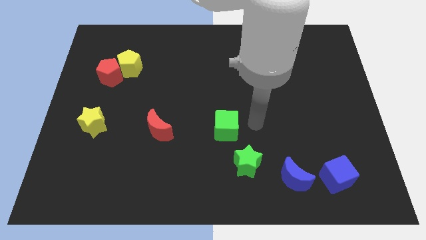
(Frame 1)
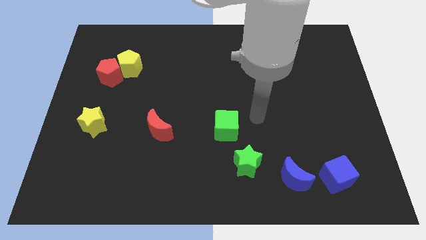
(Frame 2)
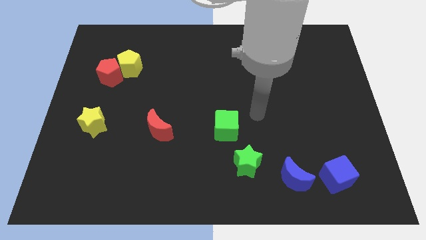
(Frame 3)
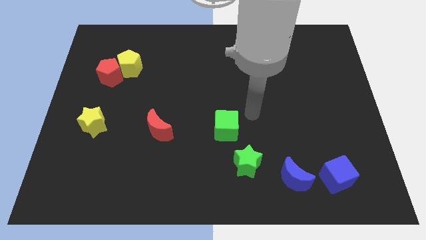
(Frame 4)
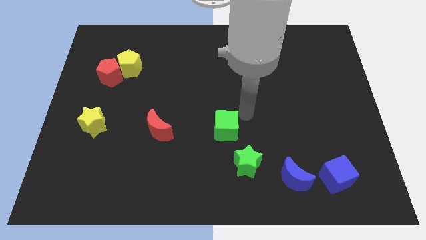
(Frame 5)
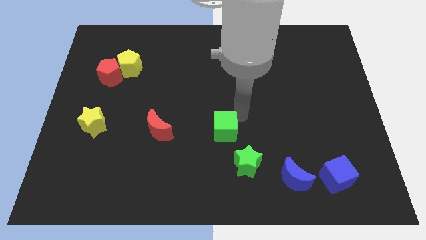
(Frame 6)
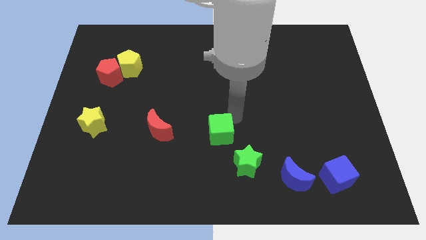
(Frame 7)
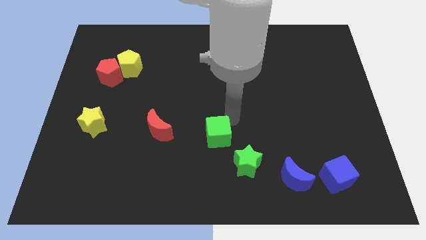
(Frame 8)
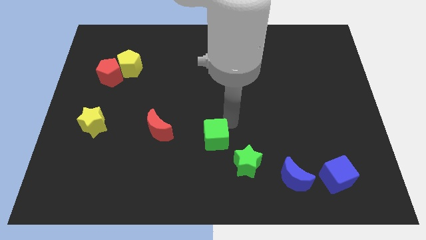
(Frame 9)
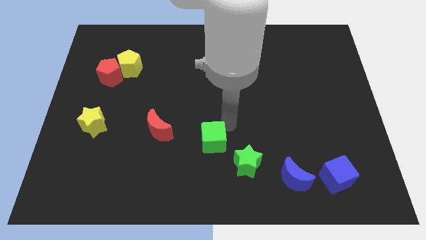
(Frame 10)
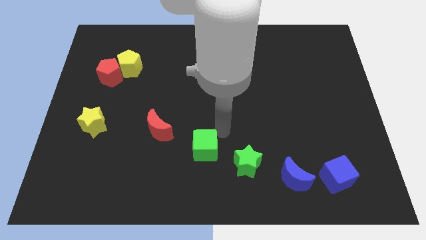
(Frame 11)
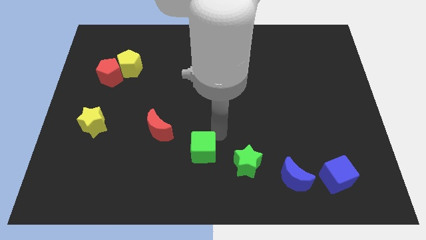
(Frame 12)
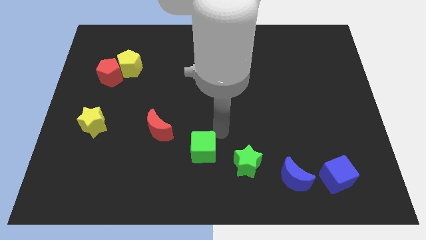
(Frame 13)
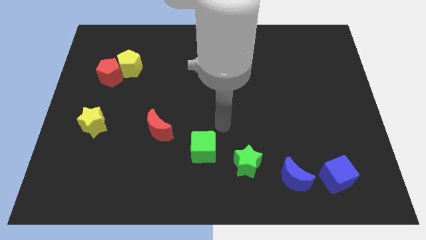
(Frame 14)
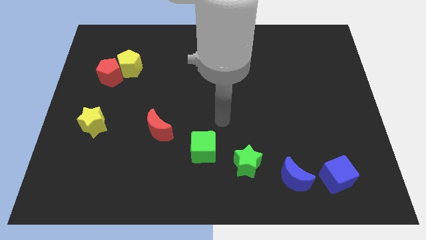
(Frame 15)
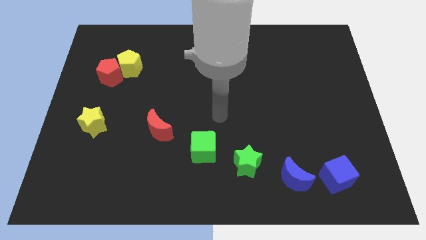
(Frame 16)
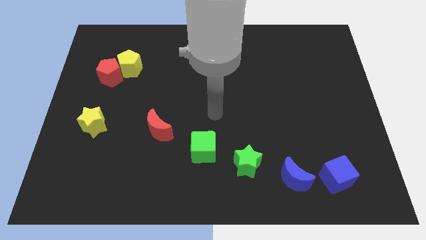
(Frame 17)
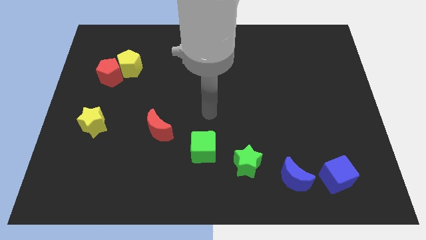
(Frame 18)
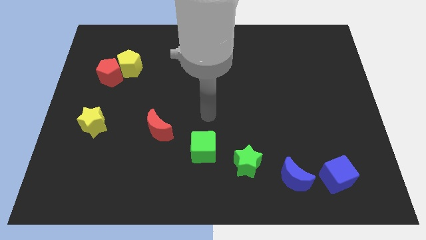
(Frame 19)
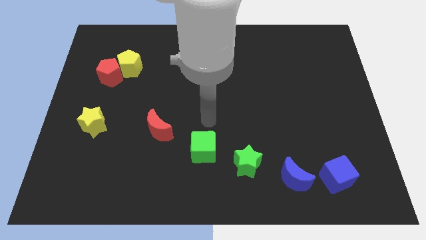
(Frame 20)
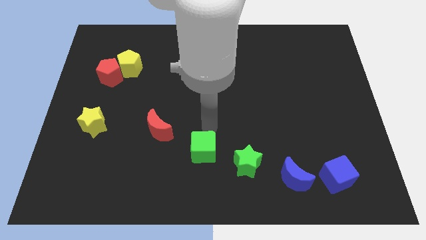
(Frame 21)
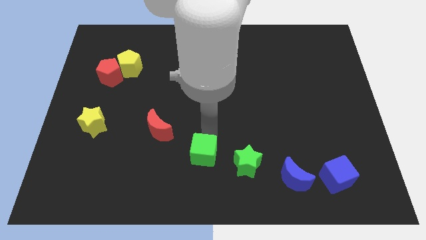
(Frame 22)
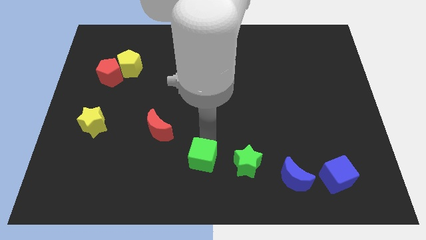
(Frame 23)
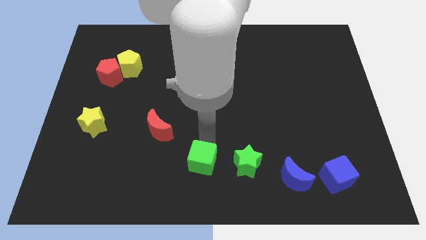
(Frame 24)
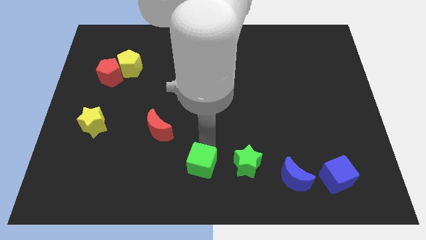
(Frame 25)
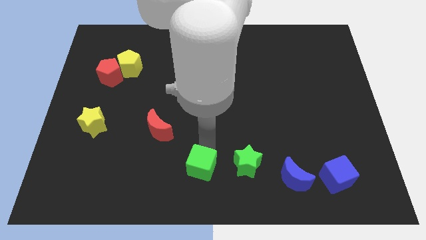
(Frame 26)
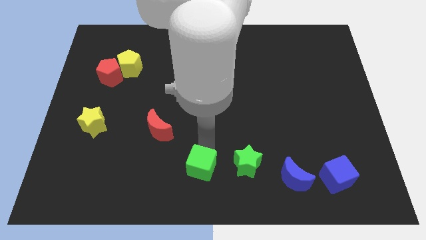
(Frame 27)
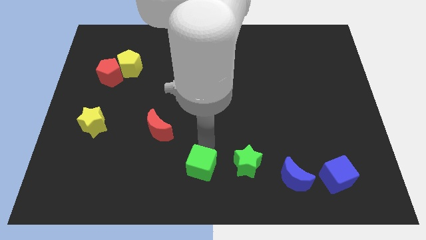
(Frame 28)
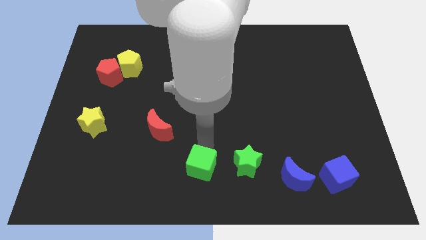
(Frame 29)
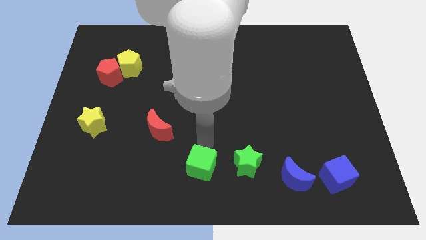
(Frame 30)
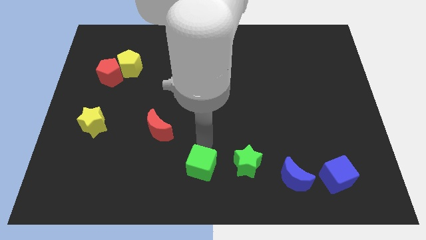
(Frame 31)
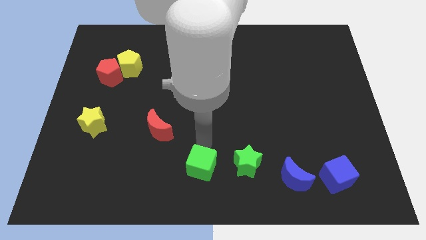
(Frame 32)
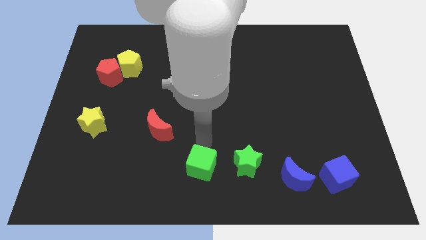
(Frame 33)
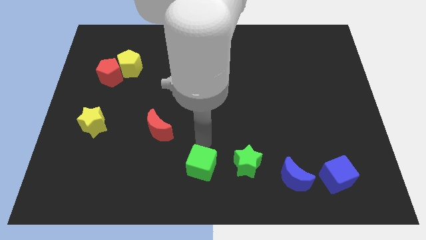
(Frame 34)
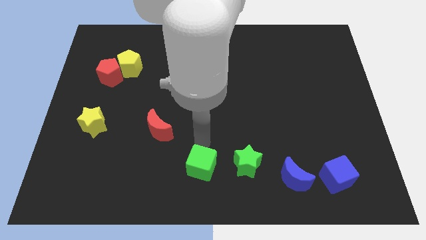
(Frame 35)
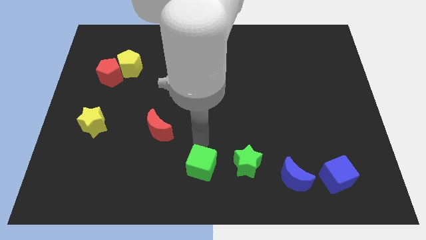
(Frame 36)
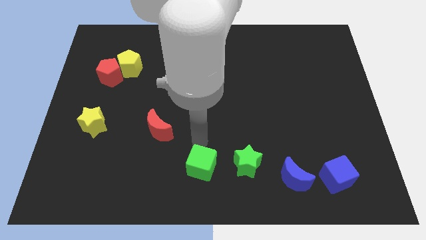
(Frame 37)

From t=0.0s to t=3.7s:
push the green star to the bottom center of the board

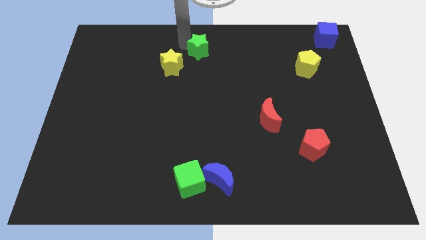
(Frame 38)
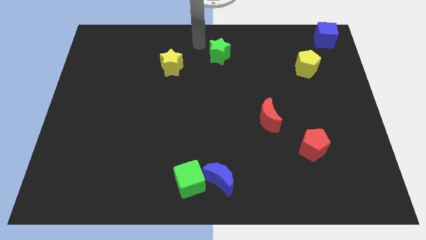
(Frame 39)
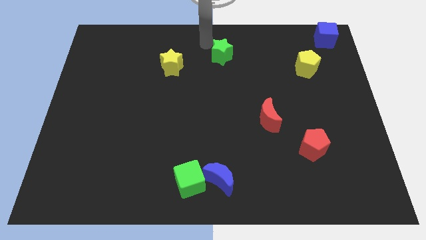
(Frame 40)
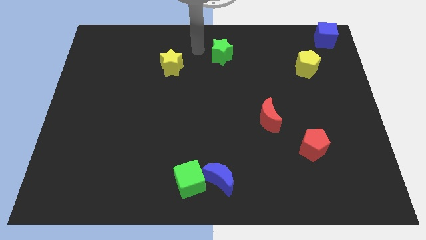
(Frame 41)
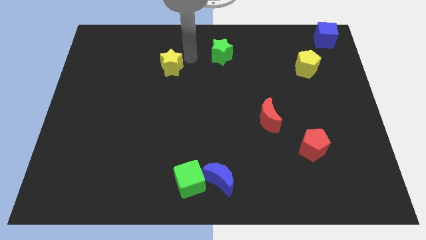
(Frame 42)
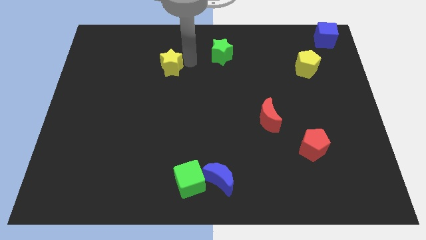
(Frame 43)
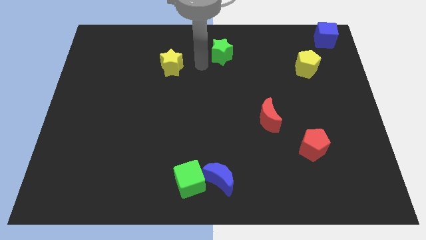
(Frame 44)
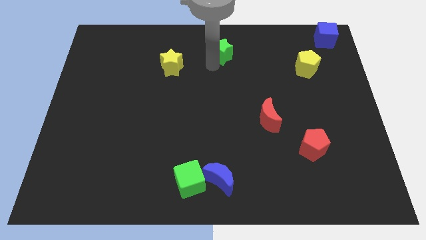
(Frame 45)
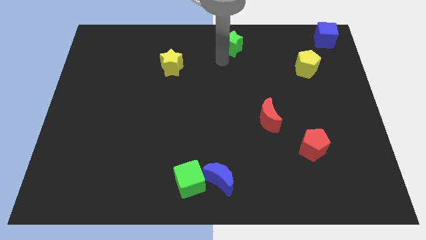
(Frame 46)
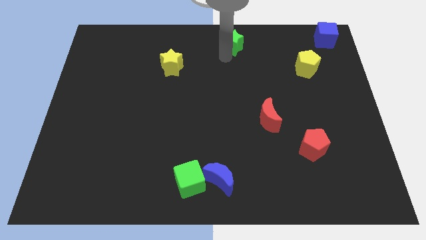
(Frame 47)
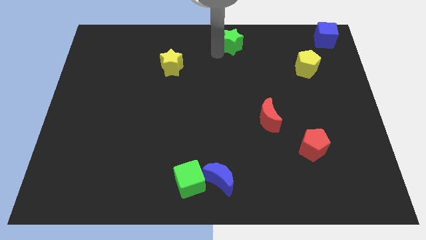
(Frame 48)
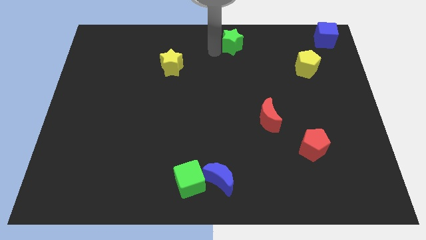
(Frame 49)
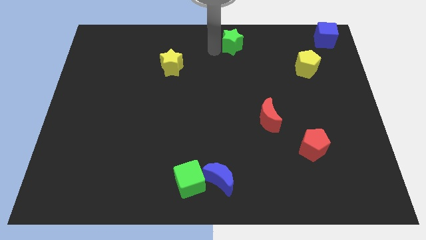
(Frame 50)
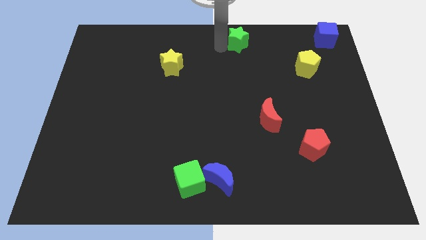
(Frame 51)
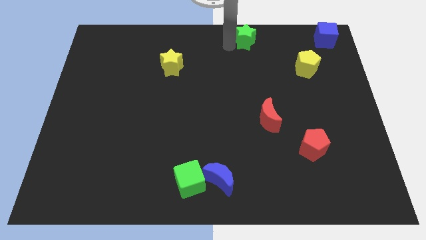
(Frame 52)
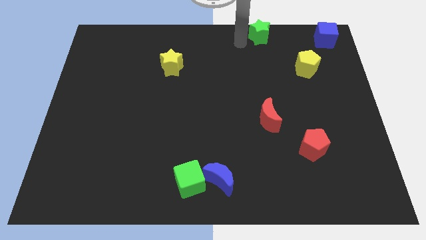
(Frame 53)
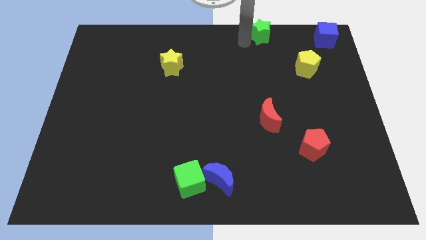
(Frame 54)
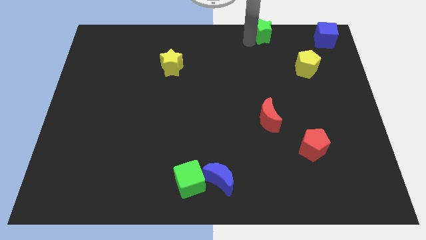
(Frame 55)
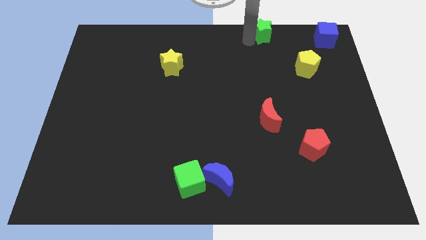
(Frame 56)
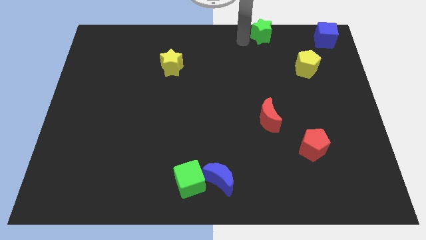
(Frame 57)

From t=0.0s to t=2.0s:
move the green star horizontally left to the blue cube

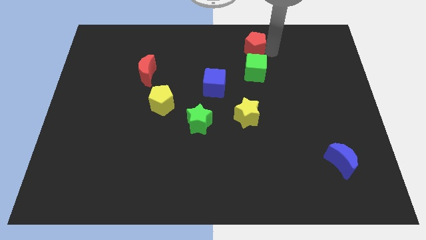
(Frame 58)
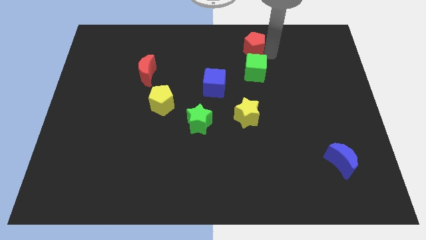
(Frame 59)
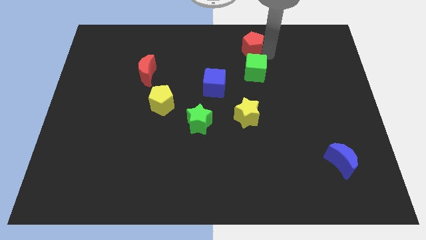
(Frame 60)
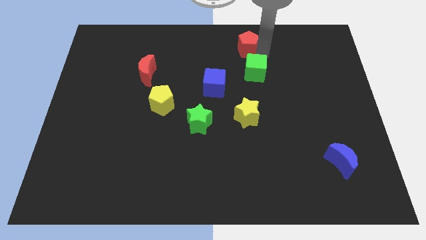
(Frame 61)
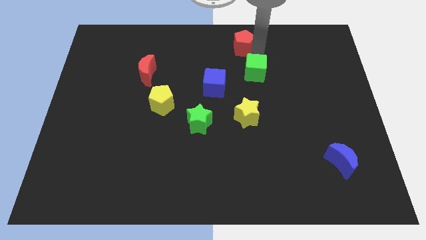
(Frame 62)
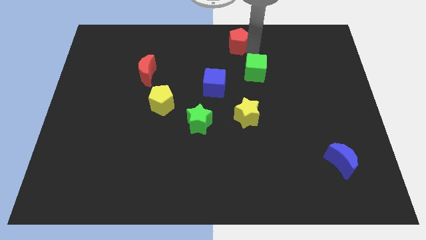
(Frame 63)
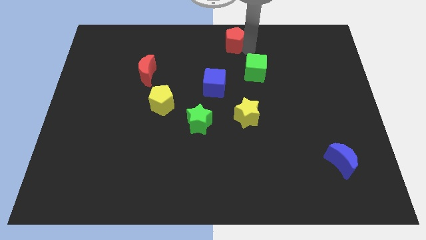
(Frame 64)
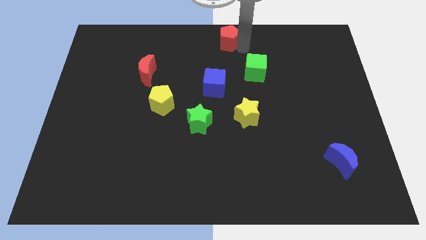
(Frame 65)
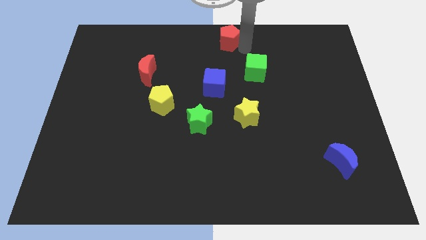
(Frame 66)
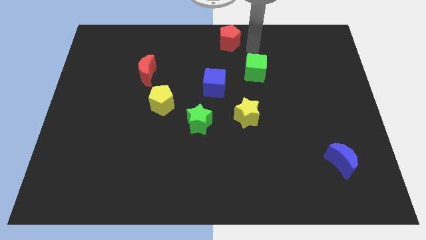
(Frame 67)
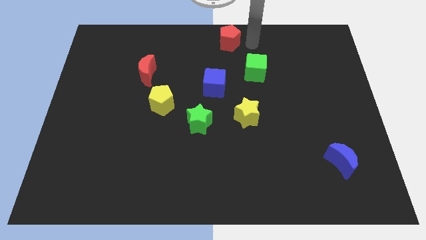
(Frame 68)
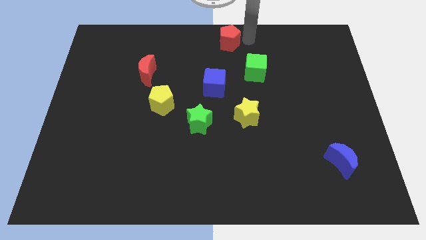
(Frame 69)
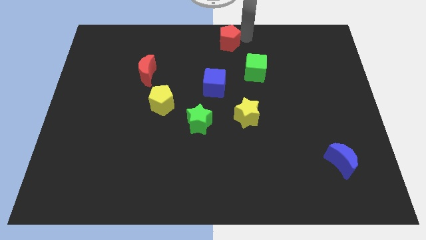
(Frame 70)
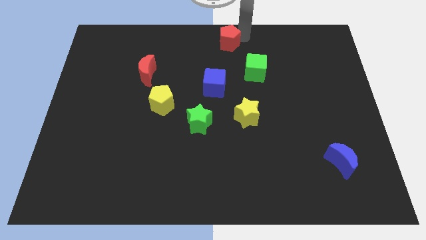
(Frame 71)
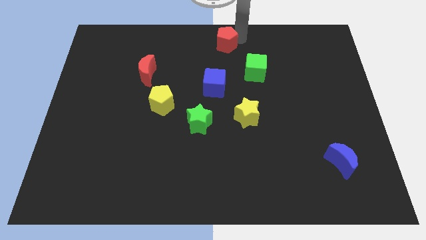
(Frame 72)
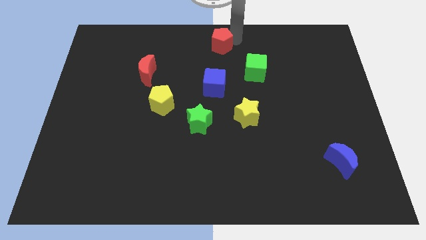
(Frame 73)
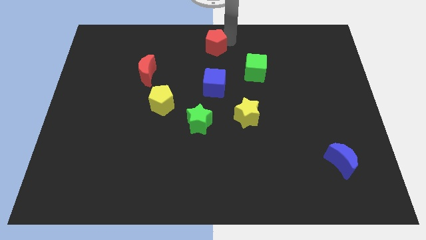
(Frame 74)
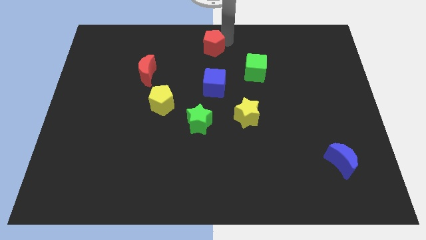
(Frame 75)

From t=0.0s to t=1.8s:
move the red pentagon above the blue cube

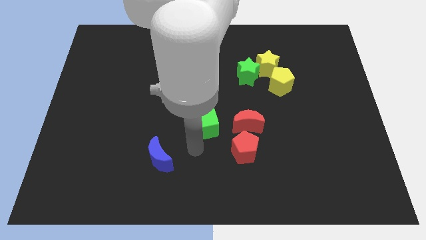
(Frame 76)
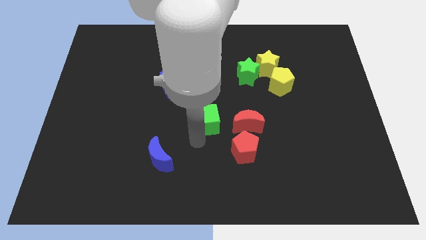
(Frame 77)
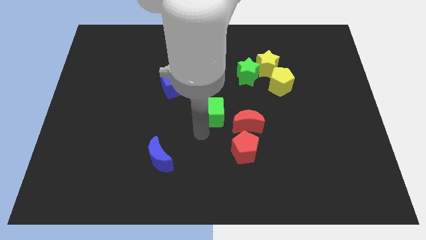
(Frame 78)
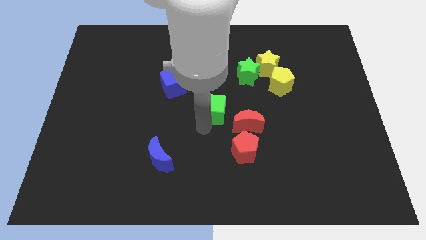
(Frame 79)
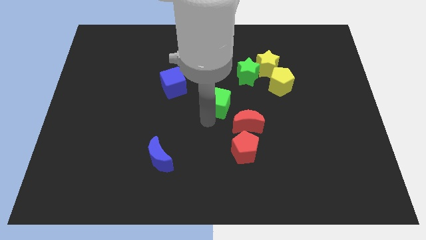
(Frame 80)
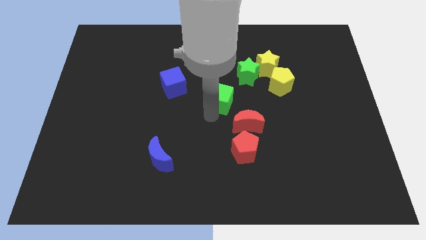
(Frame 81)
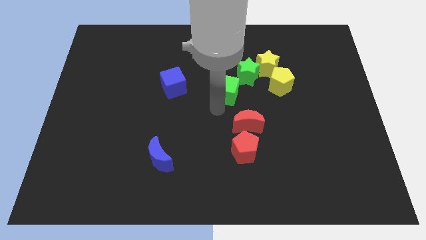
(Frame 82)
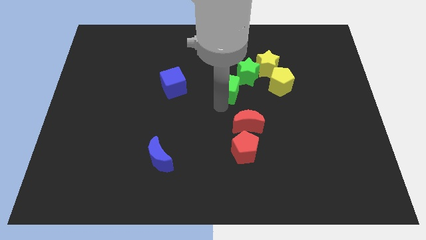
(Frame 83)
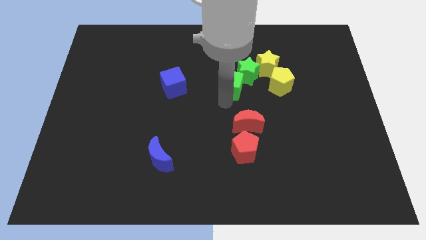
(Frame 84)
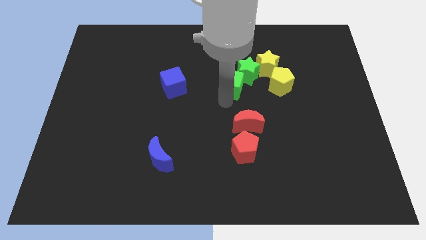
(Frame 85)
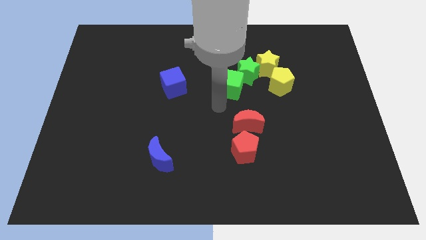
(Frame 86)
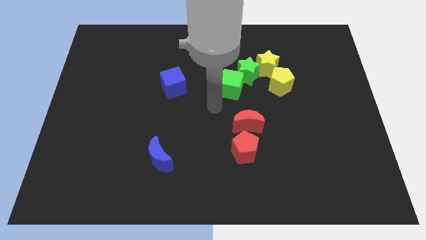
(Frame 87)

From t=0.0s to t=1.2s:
push the green cube below the green star

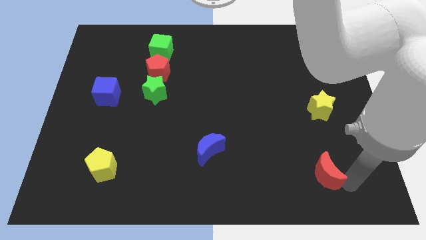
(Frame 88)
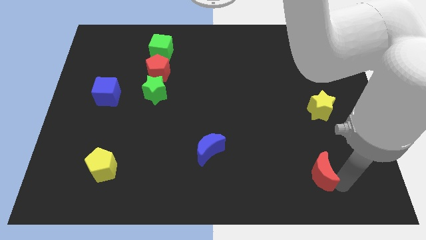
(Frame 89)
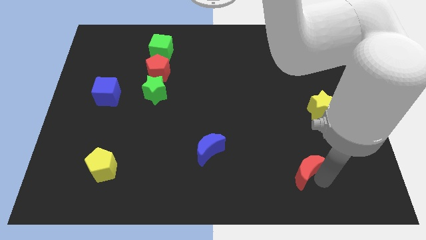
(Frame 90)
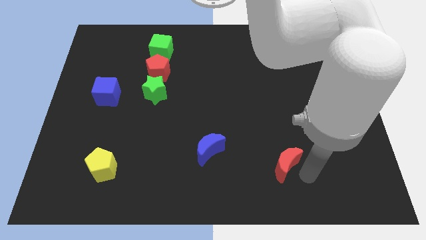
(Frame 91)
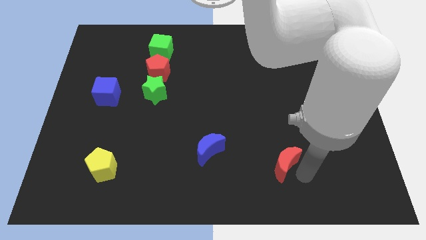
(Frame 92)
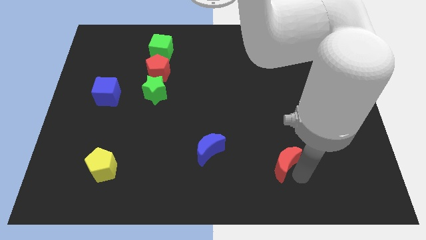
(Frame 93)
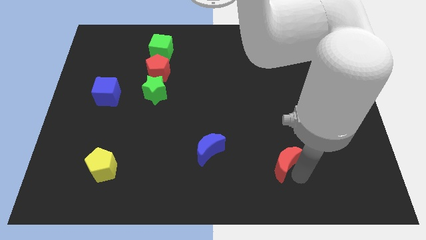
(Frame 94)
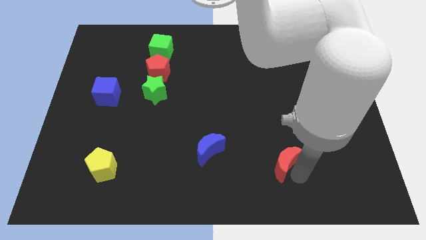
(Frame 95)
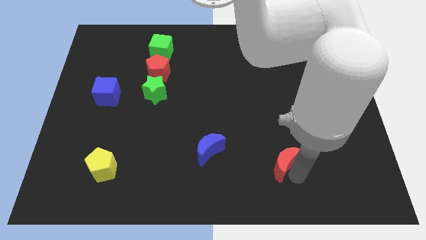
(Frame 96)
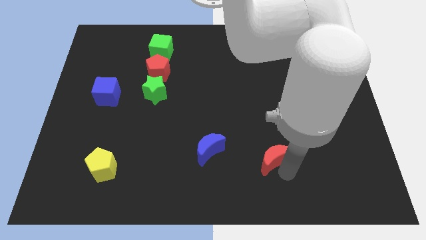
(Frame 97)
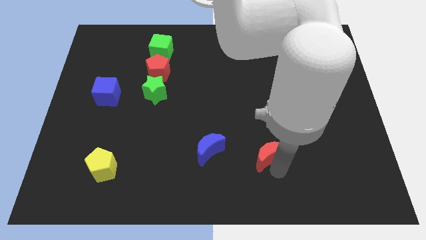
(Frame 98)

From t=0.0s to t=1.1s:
place red moon to the right of blue moon
